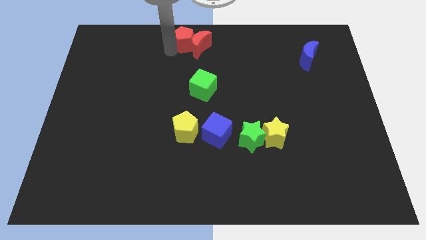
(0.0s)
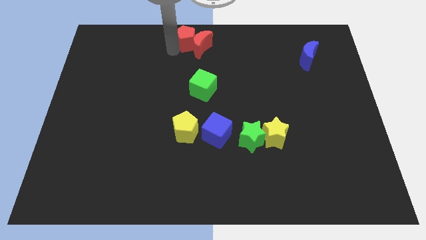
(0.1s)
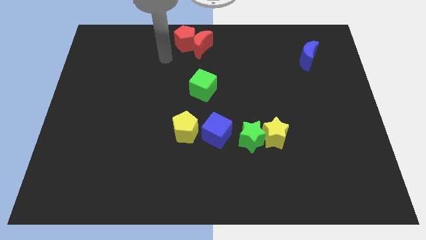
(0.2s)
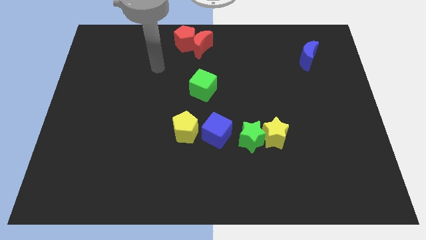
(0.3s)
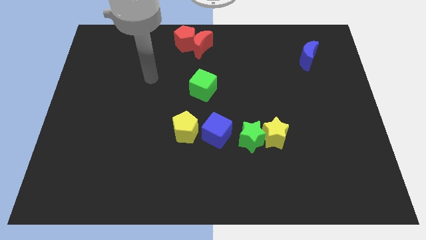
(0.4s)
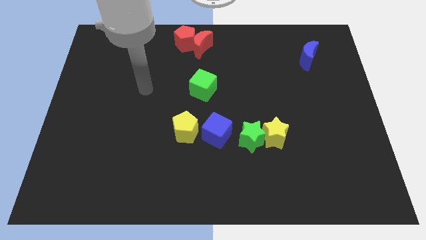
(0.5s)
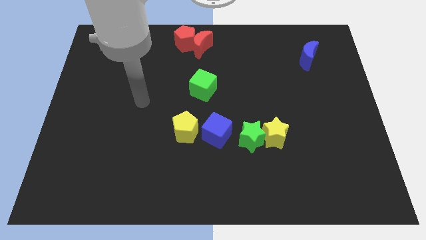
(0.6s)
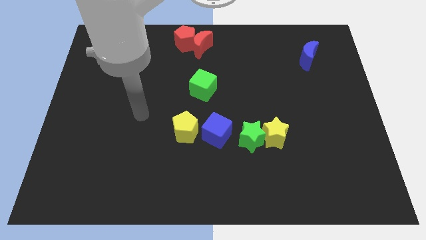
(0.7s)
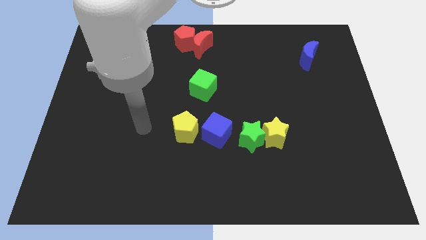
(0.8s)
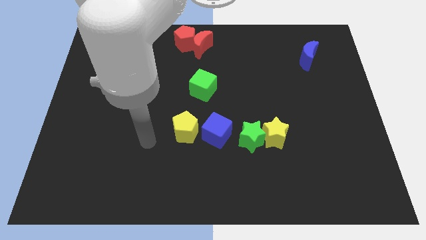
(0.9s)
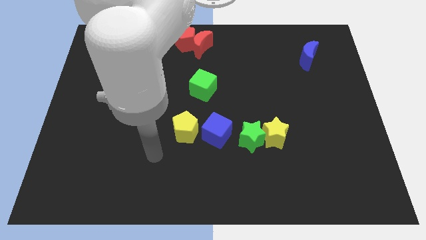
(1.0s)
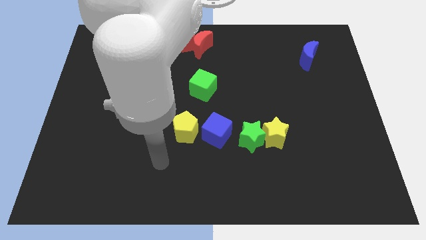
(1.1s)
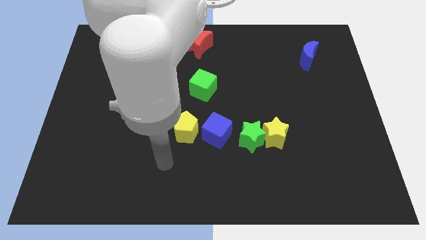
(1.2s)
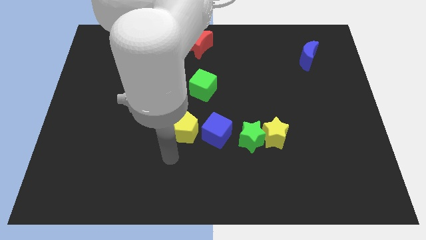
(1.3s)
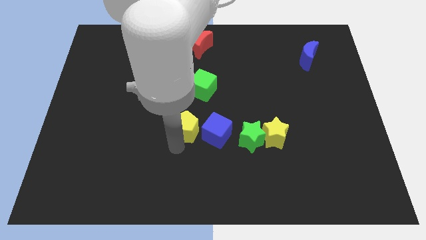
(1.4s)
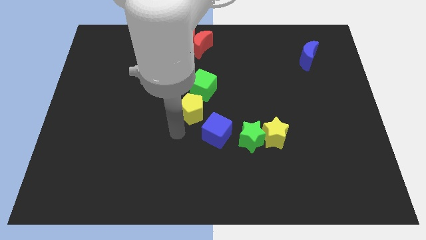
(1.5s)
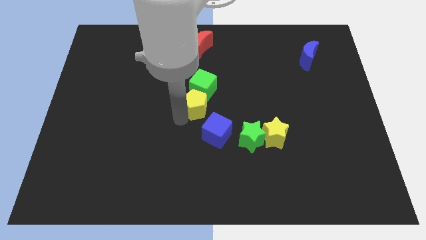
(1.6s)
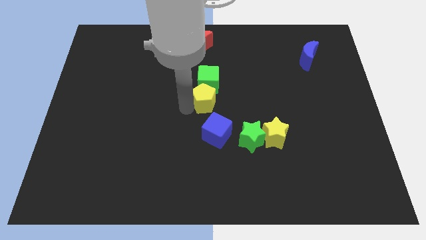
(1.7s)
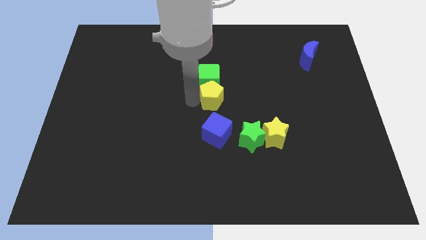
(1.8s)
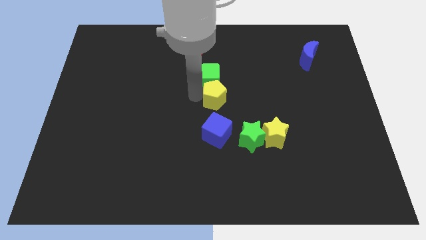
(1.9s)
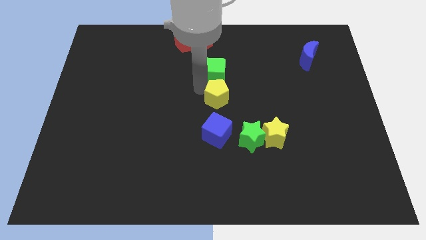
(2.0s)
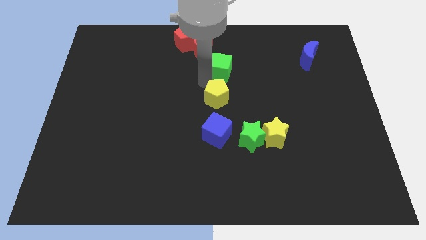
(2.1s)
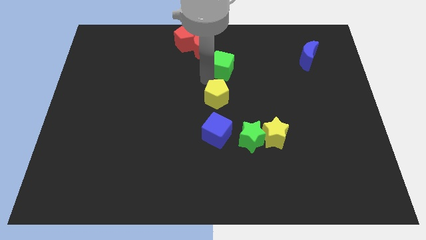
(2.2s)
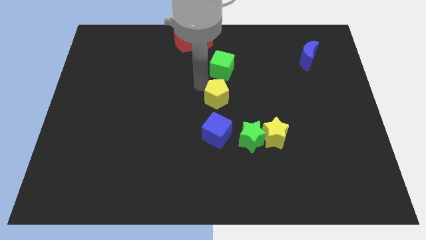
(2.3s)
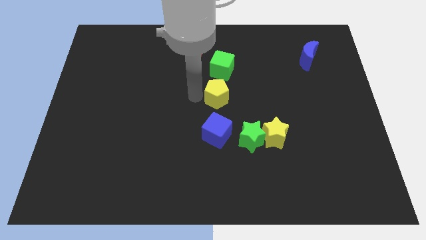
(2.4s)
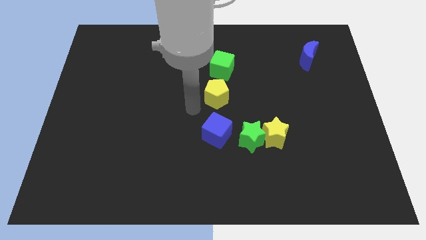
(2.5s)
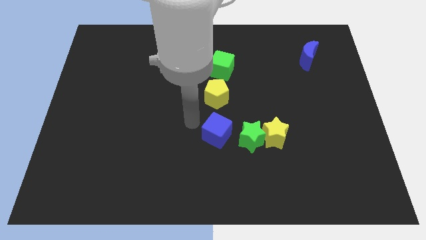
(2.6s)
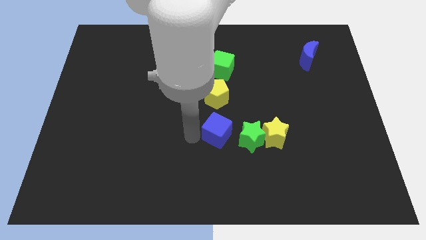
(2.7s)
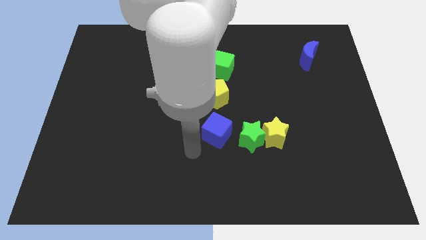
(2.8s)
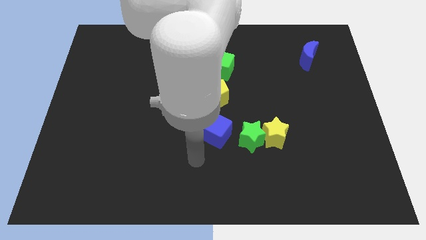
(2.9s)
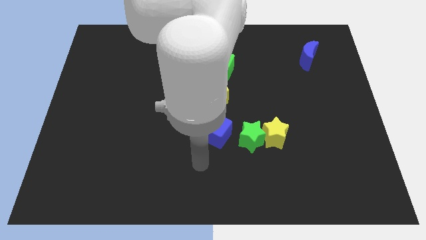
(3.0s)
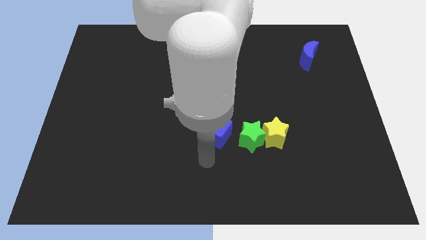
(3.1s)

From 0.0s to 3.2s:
push yellow pentagon in to green cube

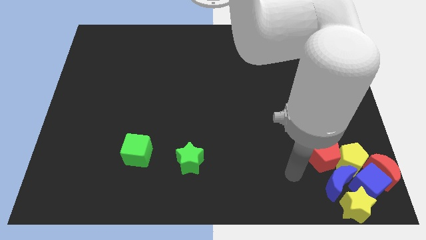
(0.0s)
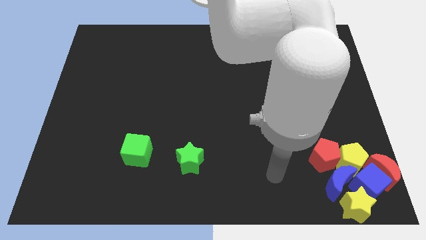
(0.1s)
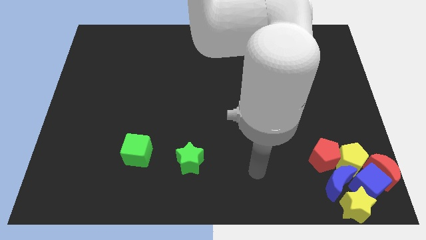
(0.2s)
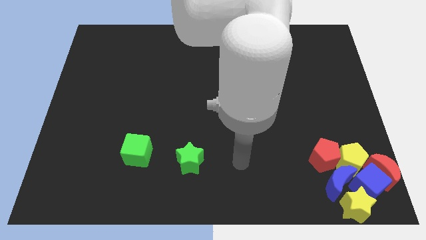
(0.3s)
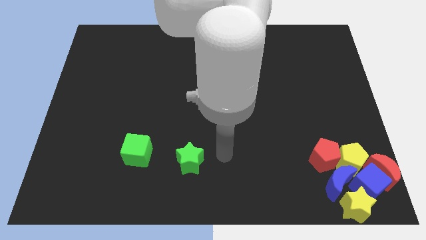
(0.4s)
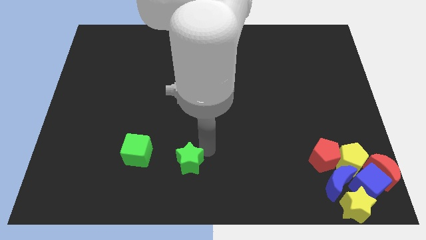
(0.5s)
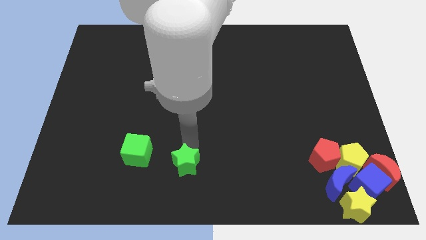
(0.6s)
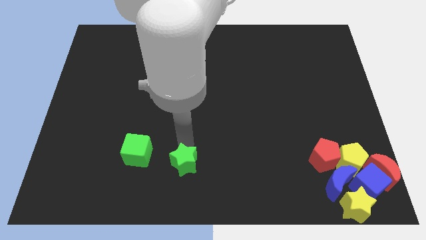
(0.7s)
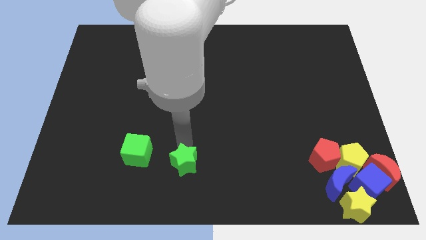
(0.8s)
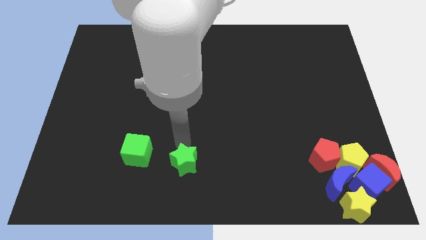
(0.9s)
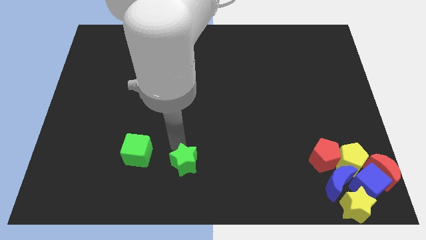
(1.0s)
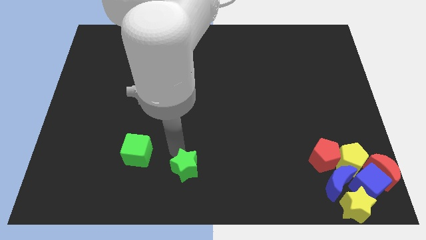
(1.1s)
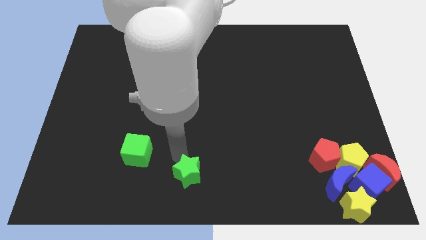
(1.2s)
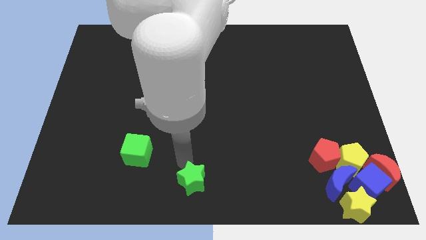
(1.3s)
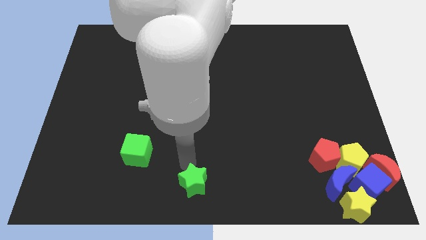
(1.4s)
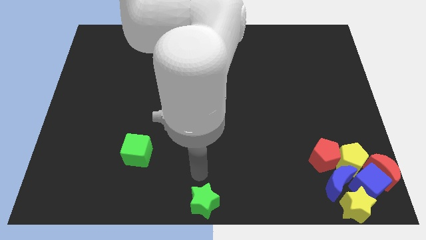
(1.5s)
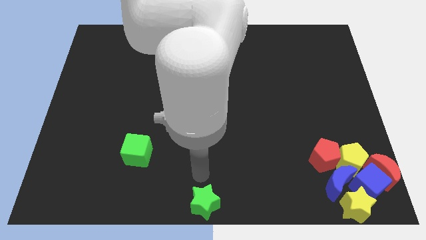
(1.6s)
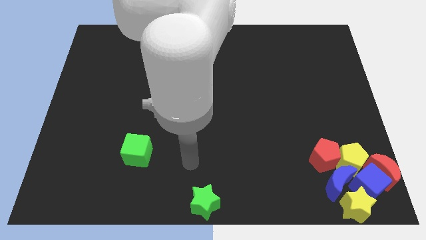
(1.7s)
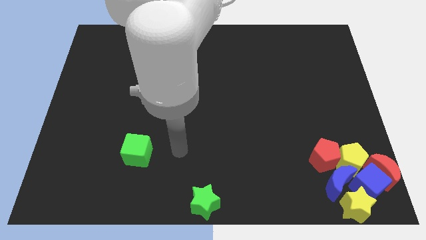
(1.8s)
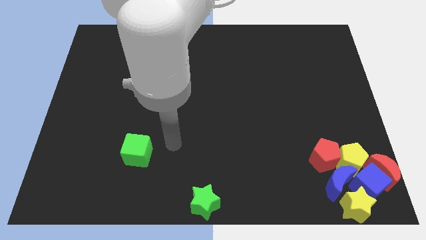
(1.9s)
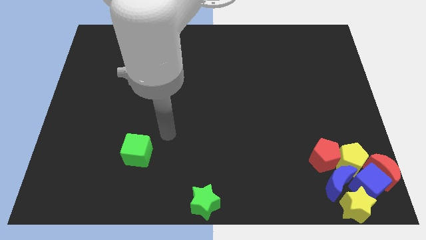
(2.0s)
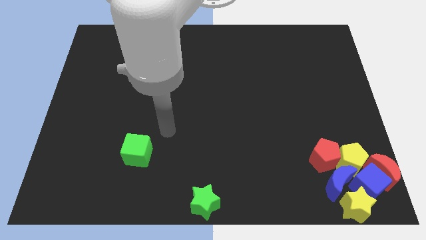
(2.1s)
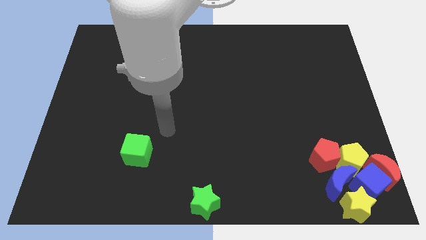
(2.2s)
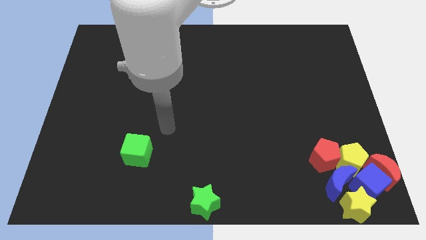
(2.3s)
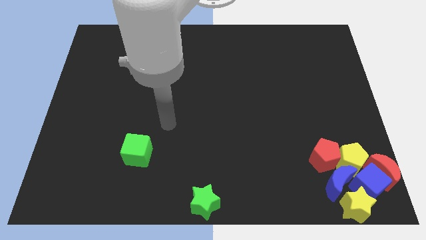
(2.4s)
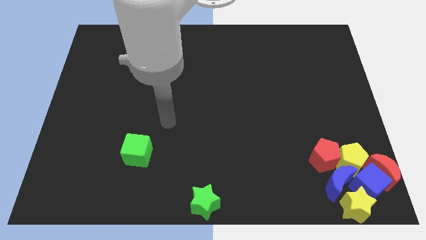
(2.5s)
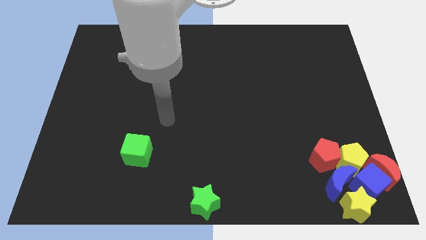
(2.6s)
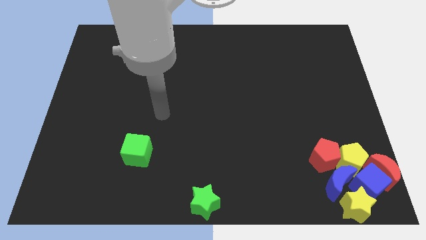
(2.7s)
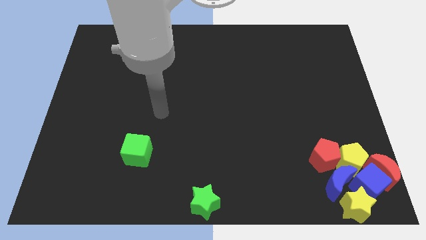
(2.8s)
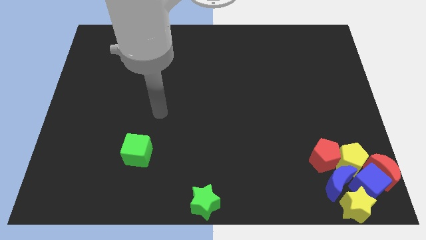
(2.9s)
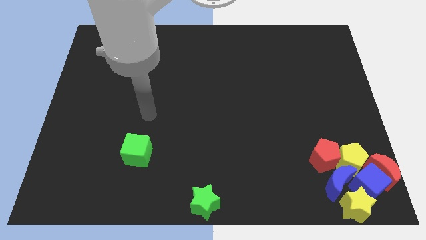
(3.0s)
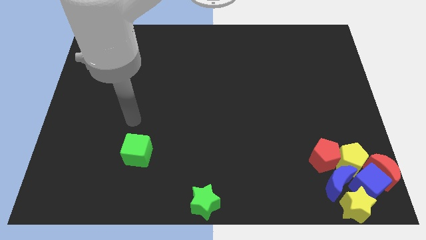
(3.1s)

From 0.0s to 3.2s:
move the green star to the bottom center of the board

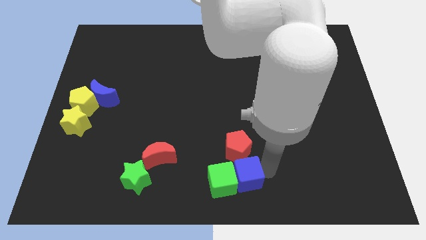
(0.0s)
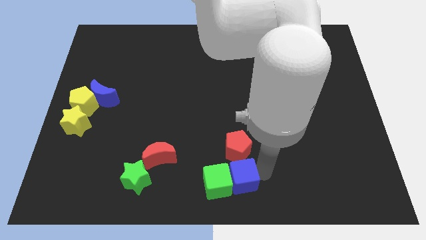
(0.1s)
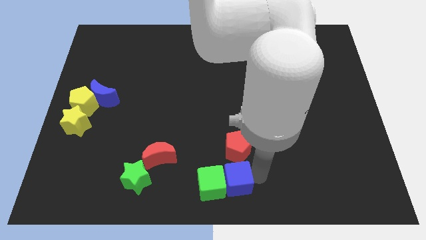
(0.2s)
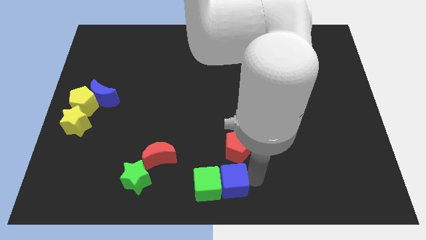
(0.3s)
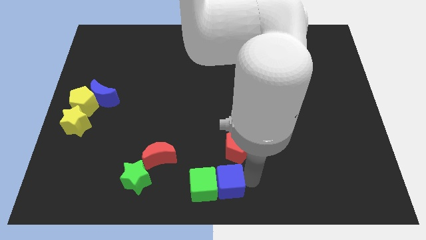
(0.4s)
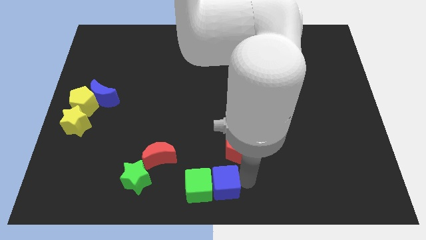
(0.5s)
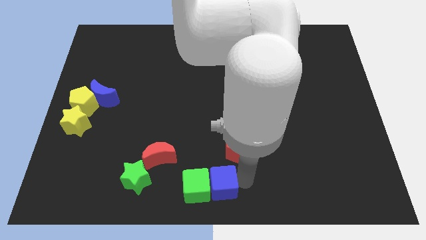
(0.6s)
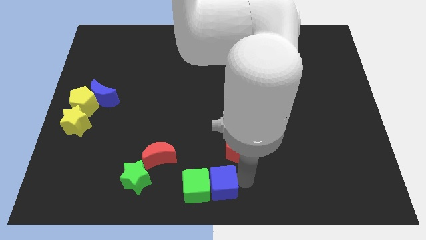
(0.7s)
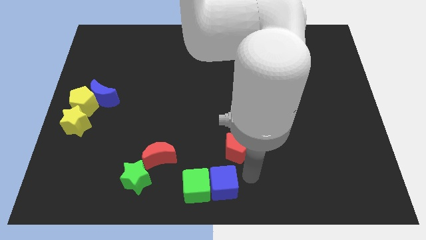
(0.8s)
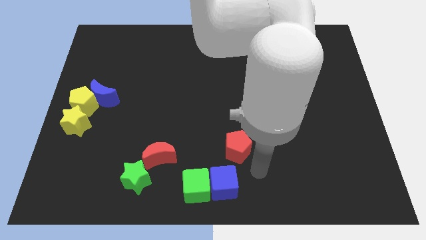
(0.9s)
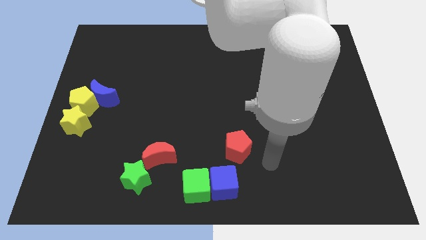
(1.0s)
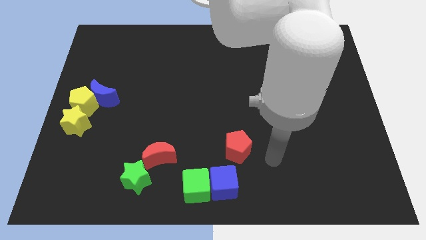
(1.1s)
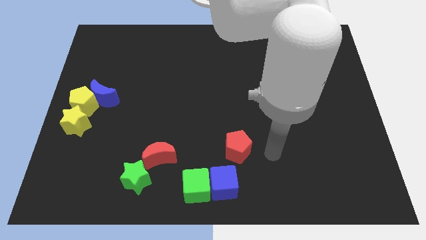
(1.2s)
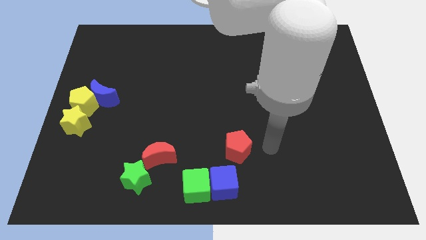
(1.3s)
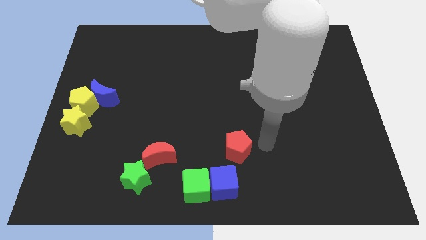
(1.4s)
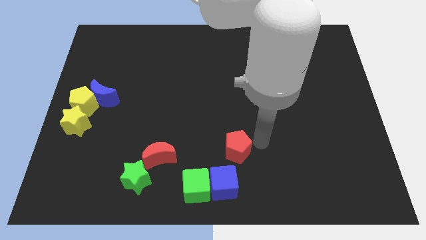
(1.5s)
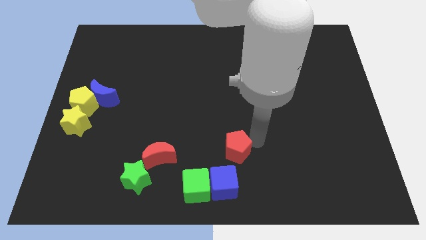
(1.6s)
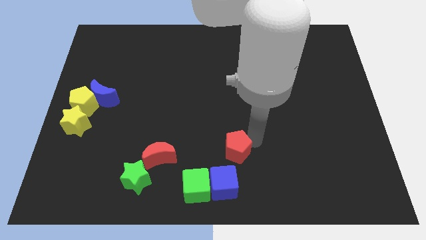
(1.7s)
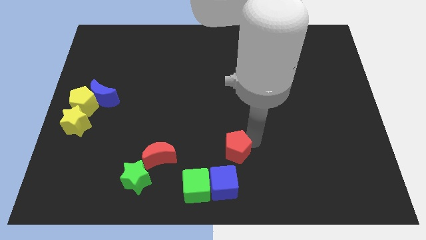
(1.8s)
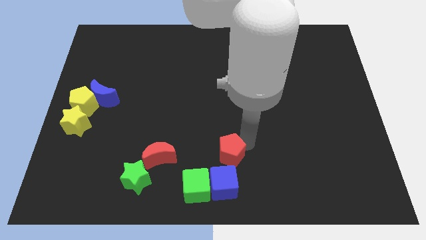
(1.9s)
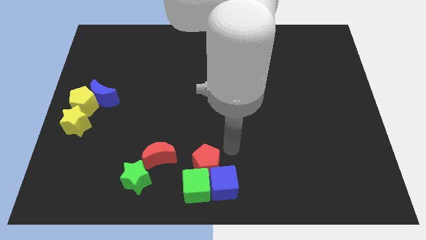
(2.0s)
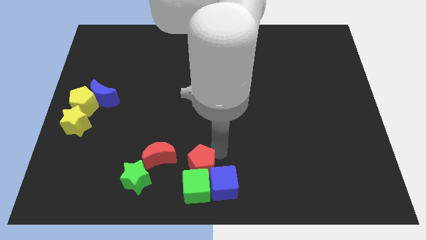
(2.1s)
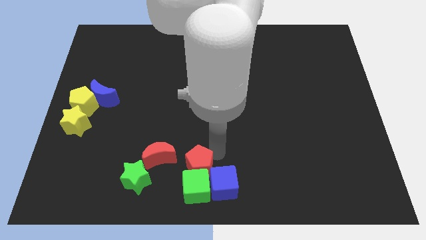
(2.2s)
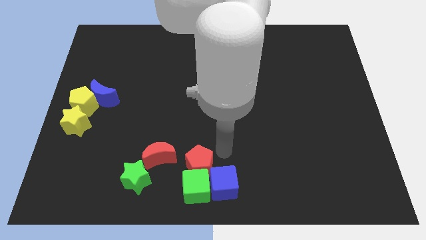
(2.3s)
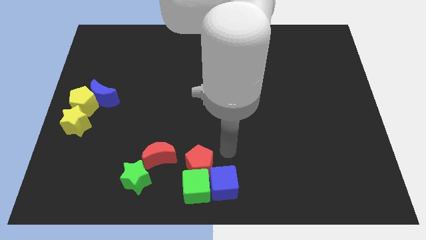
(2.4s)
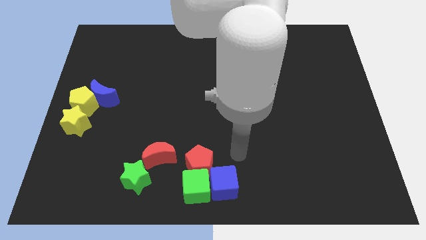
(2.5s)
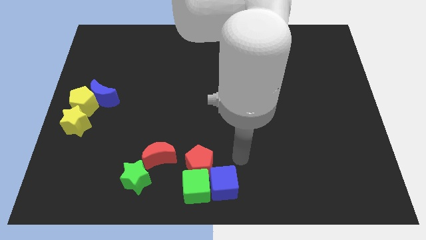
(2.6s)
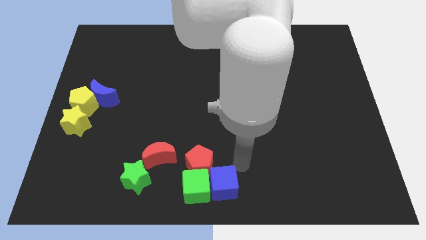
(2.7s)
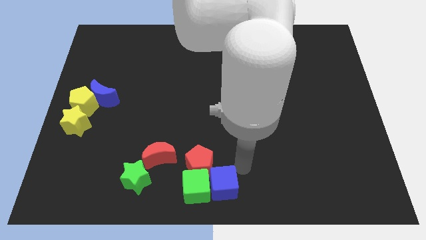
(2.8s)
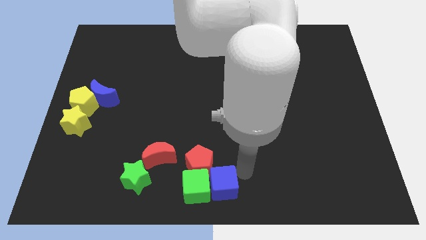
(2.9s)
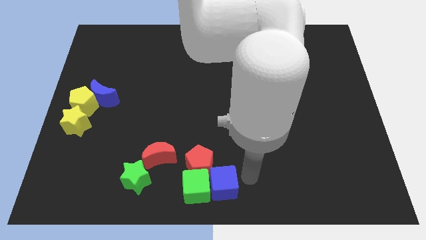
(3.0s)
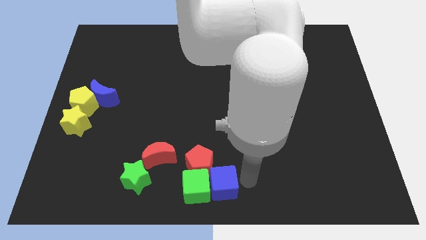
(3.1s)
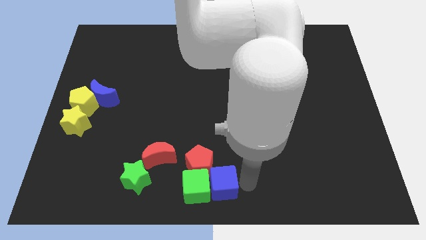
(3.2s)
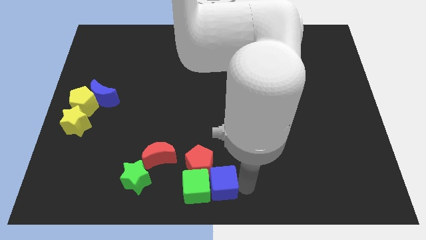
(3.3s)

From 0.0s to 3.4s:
place red pentagon on top of green cube
